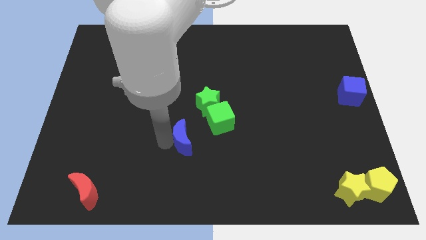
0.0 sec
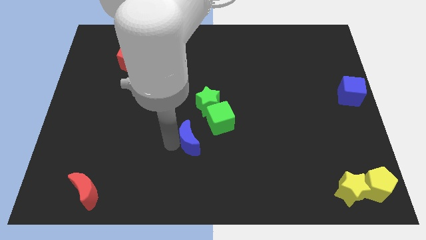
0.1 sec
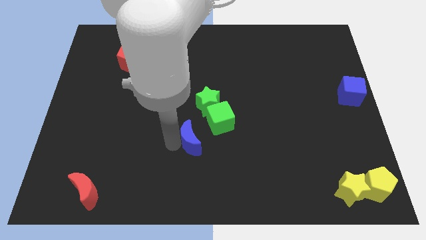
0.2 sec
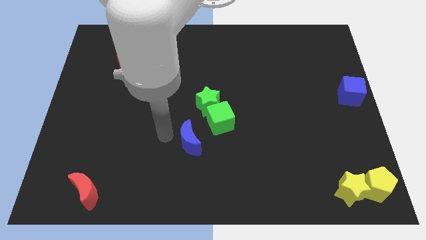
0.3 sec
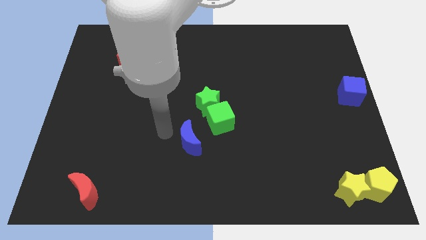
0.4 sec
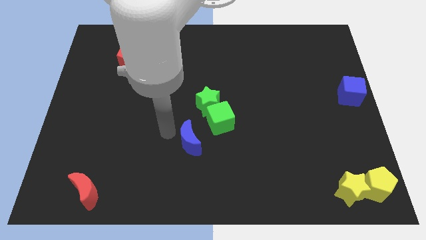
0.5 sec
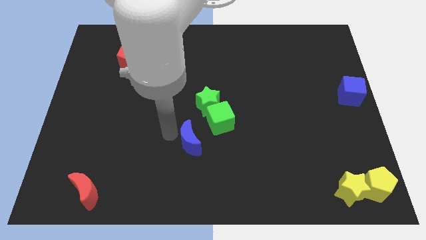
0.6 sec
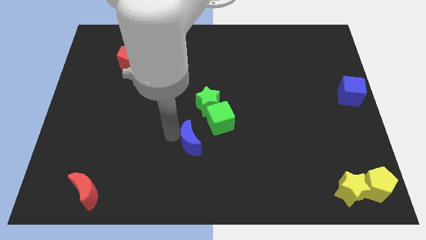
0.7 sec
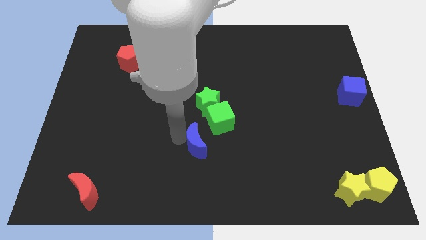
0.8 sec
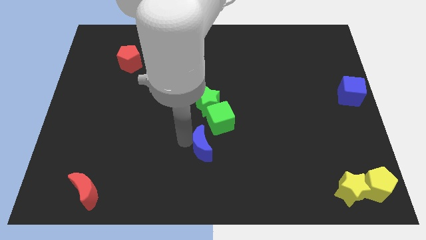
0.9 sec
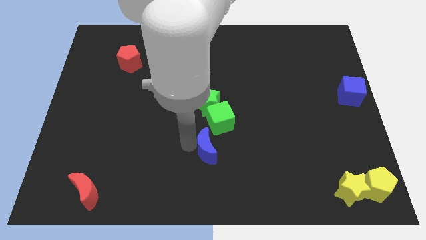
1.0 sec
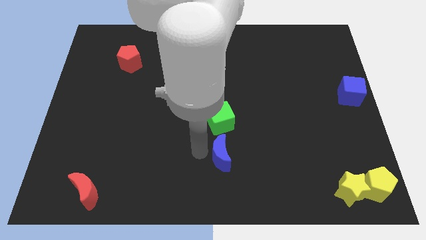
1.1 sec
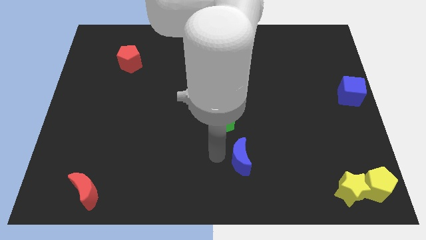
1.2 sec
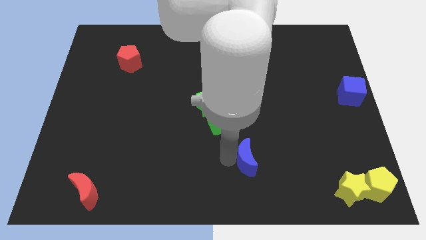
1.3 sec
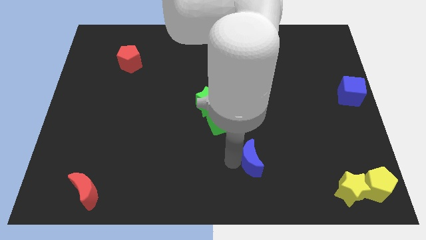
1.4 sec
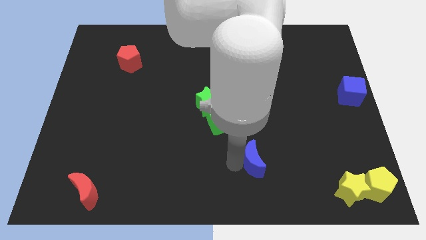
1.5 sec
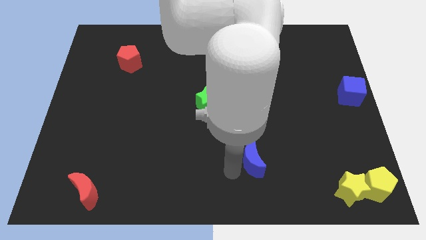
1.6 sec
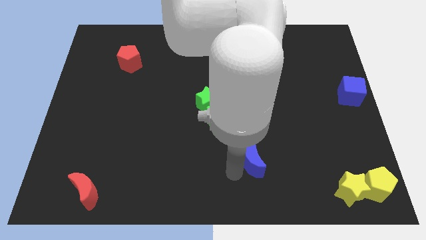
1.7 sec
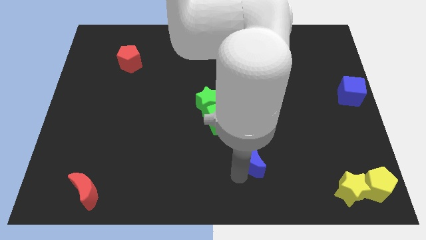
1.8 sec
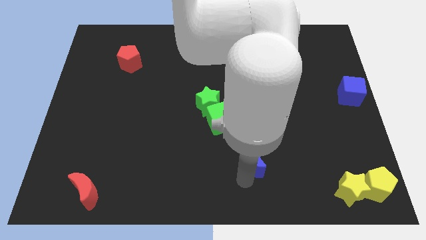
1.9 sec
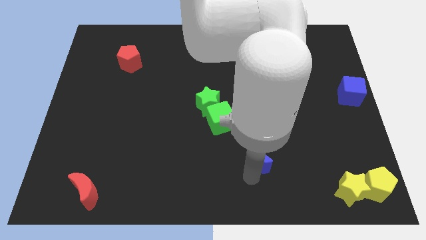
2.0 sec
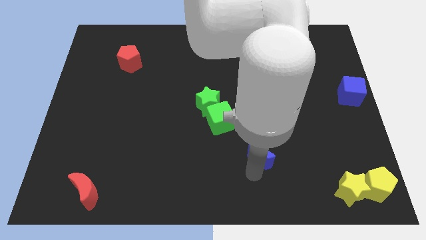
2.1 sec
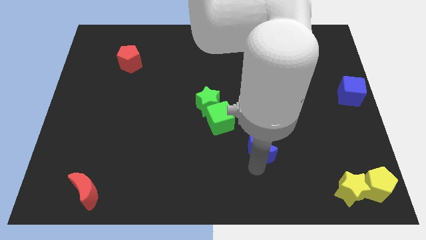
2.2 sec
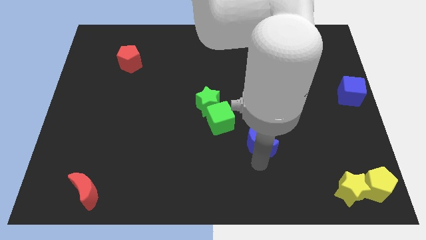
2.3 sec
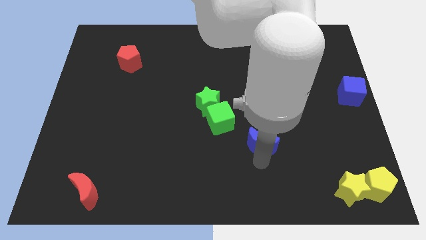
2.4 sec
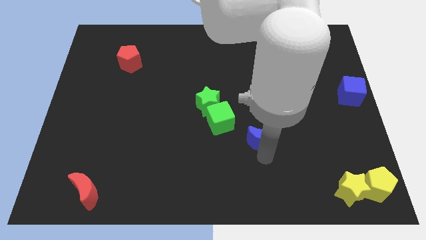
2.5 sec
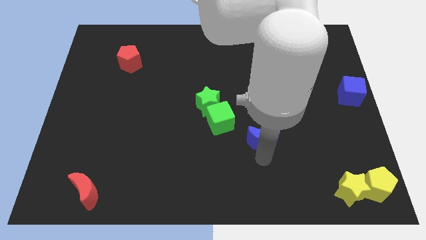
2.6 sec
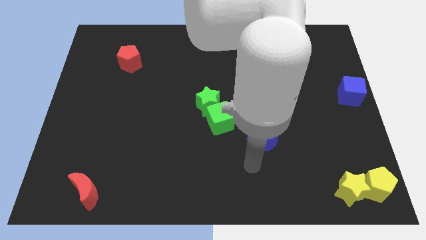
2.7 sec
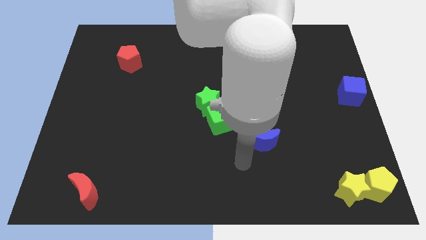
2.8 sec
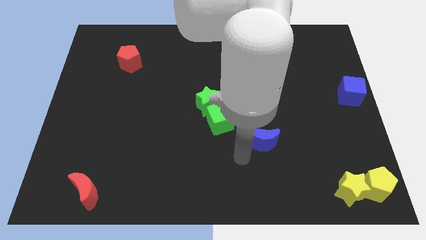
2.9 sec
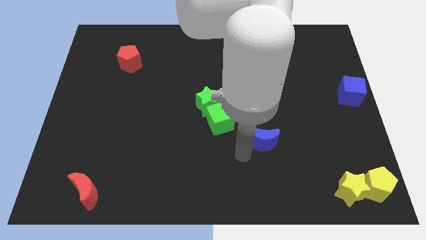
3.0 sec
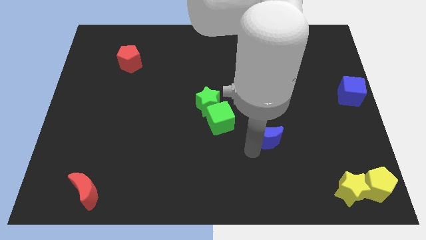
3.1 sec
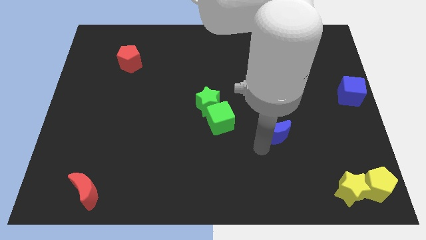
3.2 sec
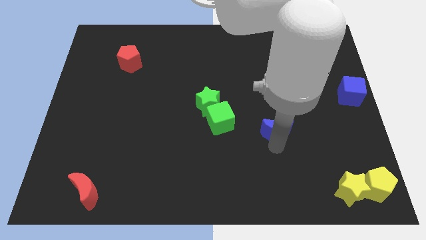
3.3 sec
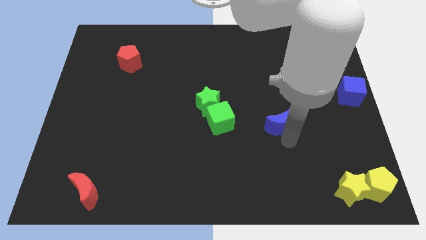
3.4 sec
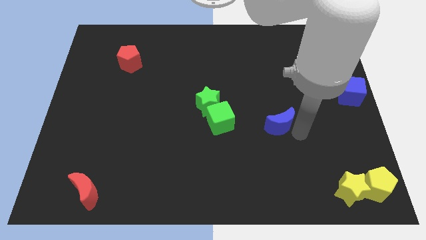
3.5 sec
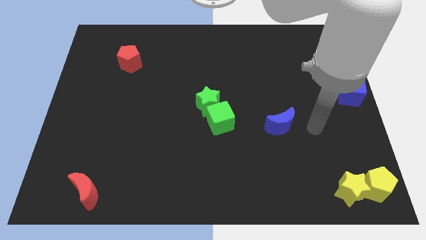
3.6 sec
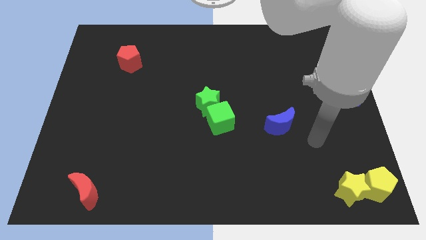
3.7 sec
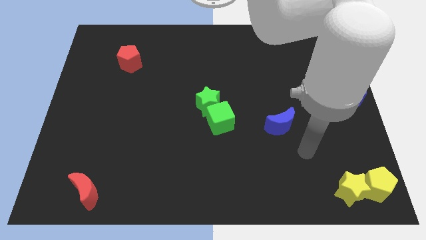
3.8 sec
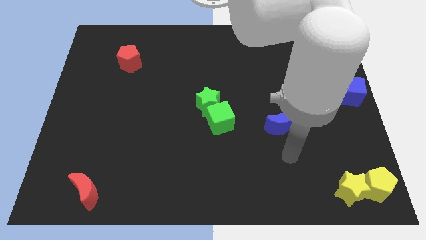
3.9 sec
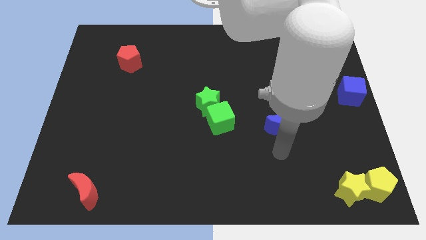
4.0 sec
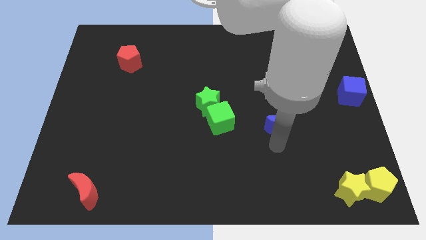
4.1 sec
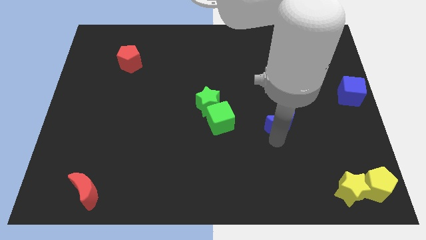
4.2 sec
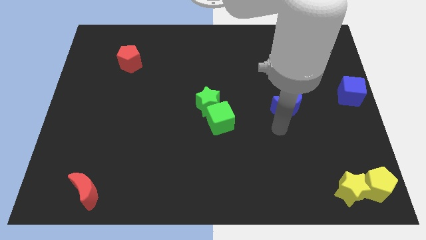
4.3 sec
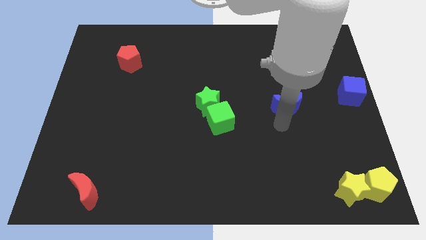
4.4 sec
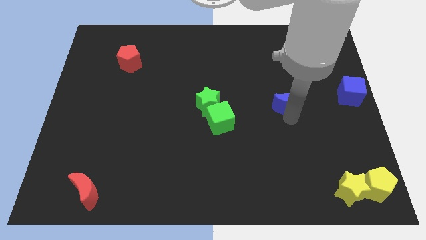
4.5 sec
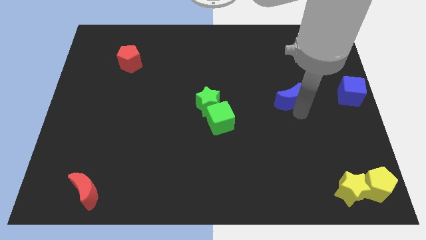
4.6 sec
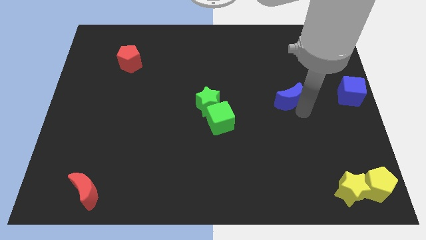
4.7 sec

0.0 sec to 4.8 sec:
place the blue moon right to the green cube

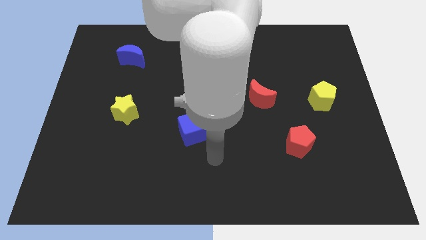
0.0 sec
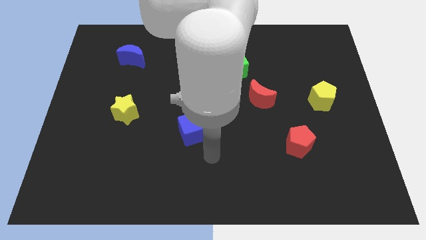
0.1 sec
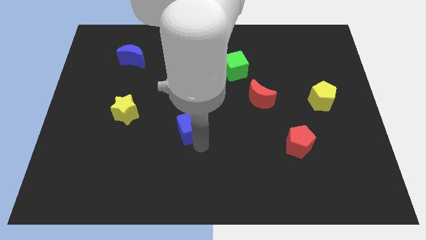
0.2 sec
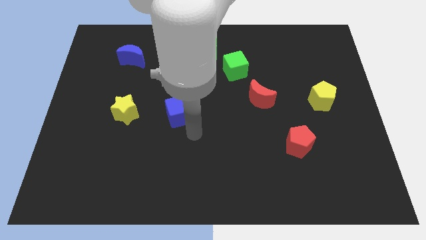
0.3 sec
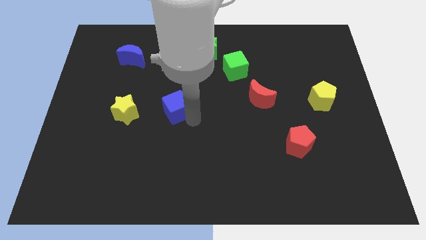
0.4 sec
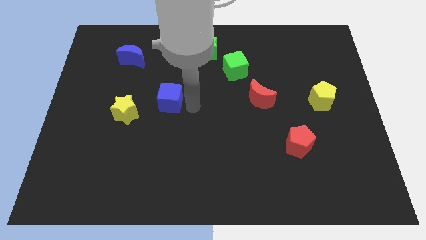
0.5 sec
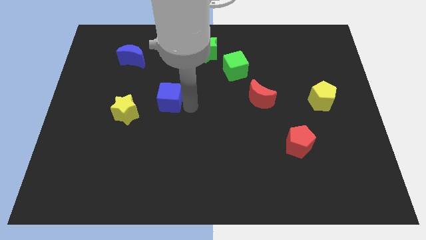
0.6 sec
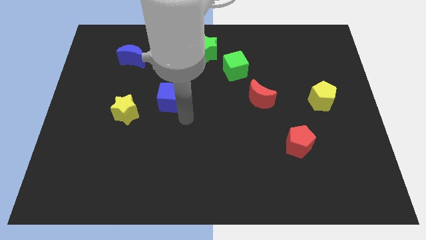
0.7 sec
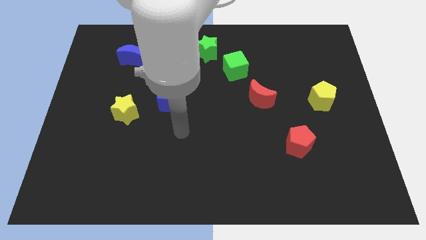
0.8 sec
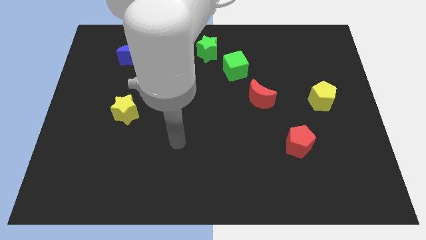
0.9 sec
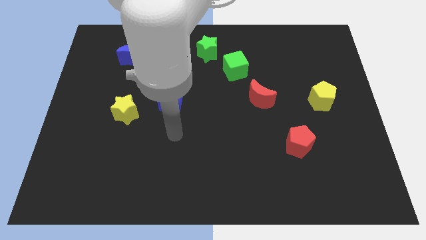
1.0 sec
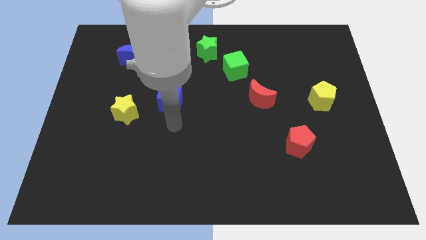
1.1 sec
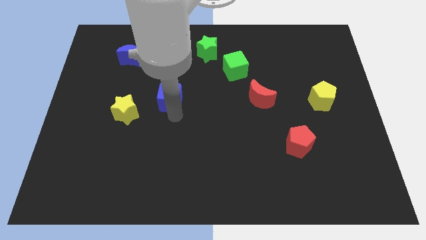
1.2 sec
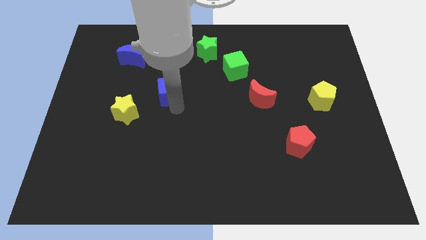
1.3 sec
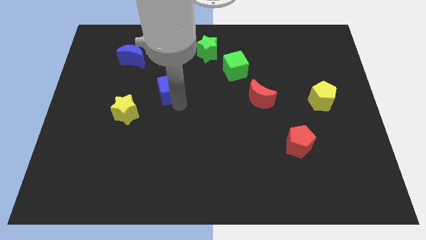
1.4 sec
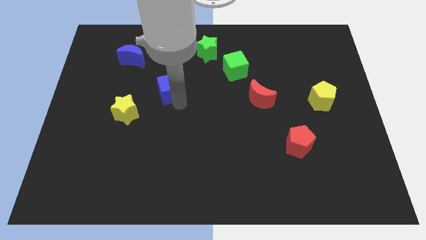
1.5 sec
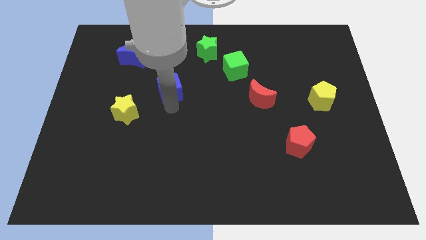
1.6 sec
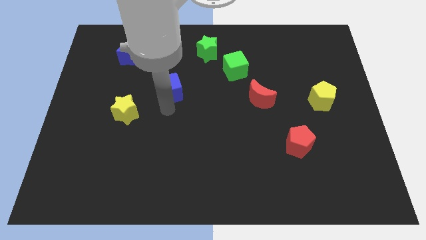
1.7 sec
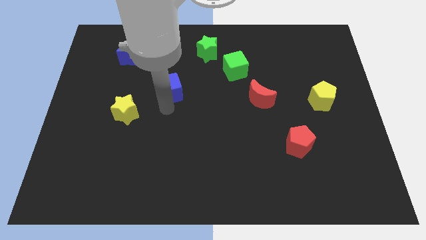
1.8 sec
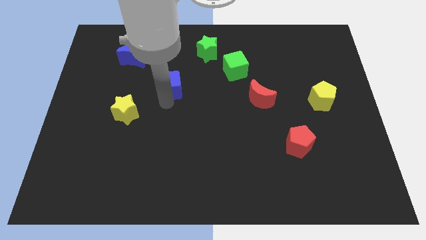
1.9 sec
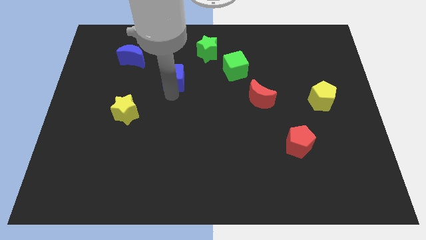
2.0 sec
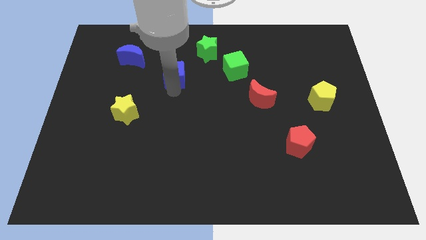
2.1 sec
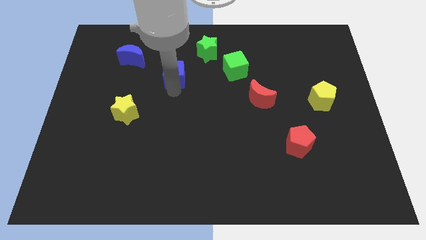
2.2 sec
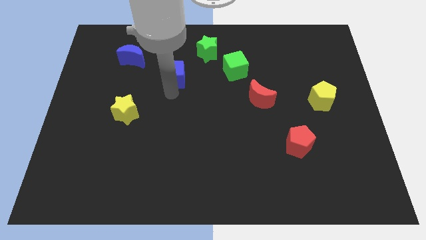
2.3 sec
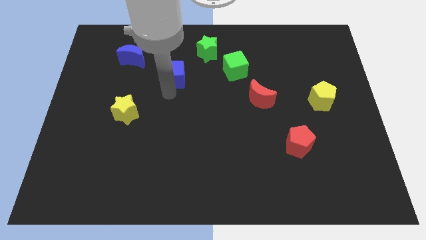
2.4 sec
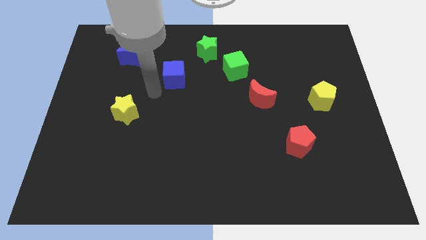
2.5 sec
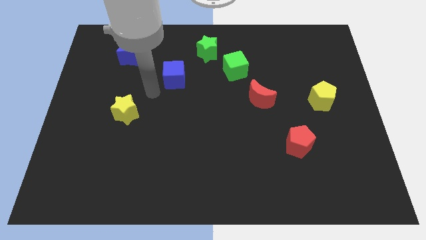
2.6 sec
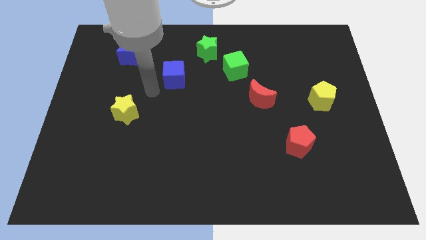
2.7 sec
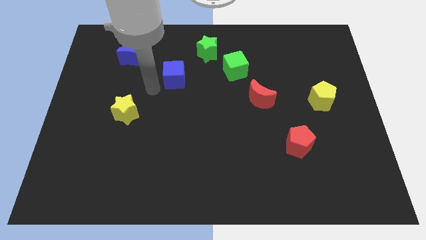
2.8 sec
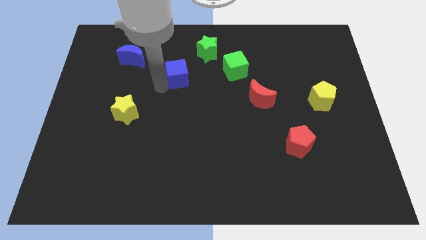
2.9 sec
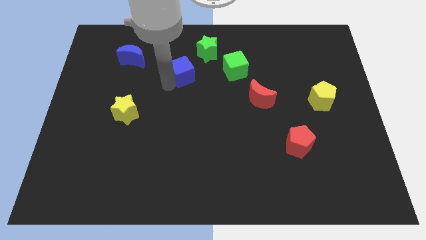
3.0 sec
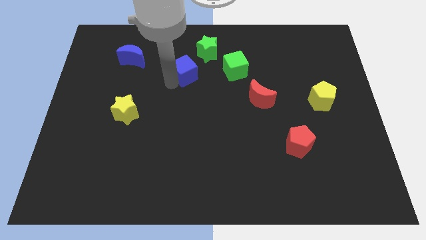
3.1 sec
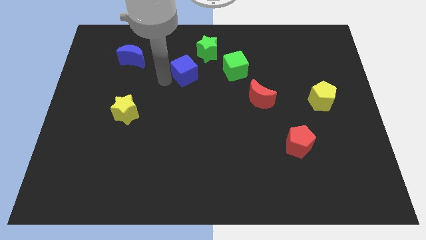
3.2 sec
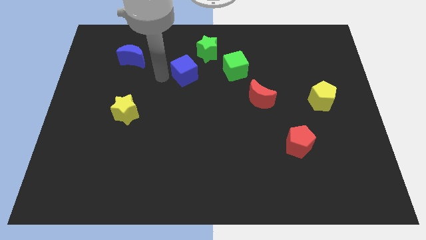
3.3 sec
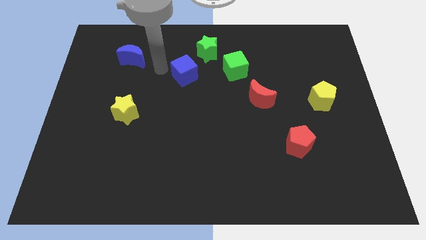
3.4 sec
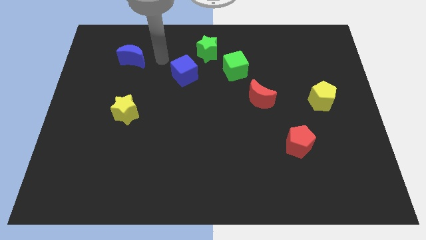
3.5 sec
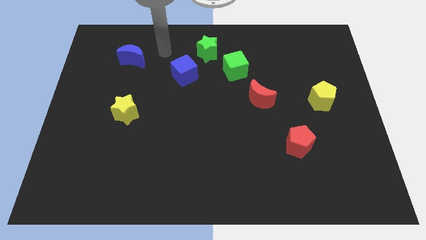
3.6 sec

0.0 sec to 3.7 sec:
place blue cube diagonally towards green star

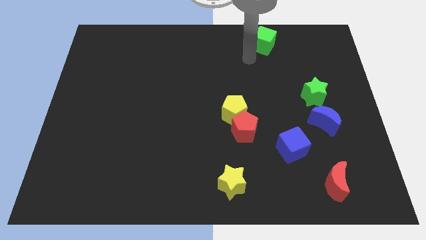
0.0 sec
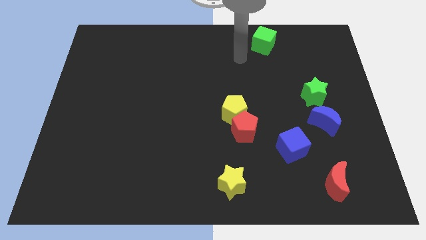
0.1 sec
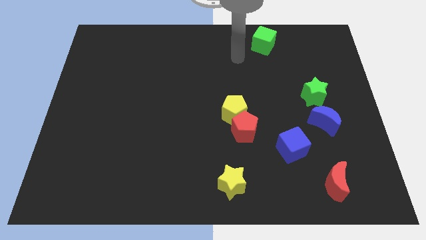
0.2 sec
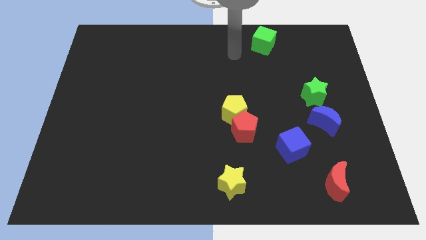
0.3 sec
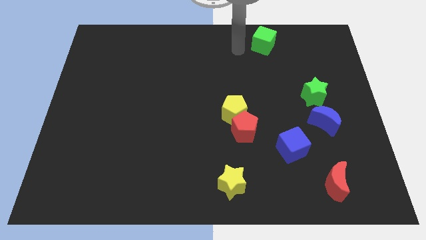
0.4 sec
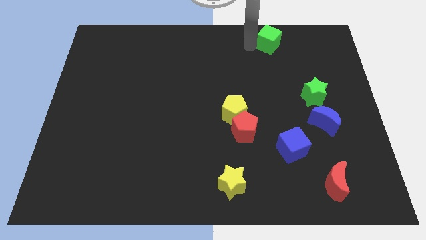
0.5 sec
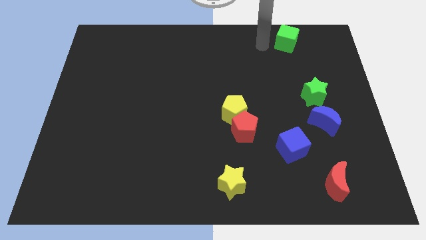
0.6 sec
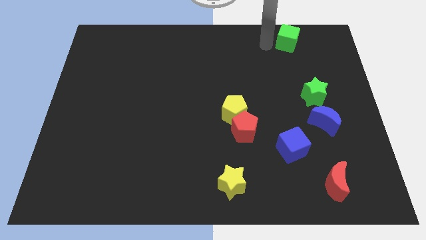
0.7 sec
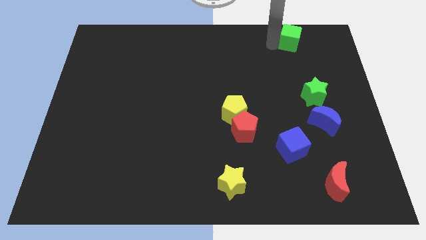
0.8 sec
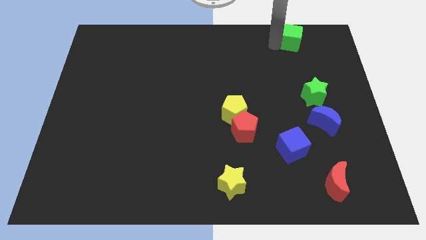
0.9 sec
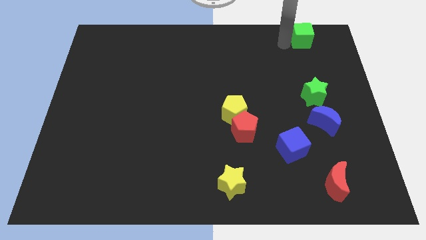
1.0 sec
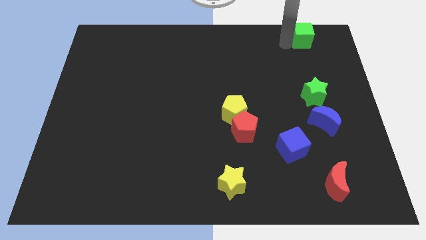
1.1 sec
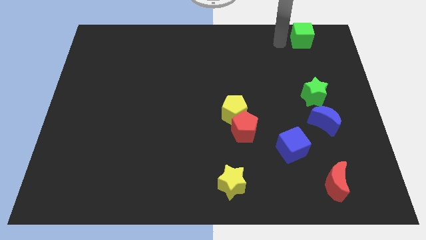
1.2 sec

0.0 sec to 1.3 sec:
place the green cube vertically at the top side of the green star
